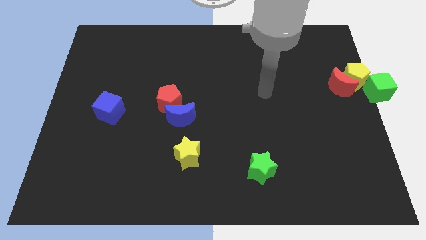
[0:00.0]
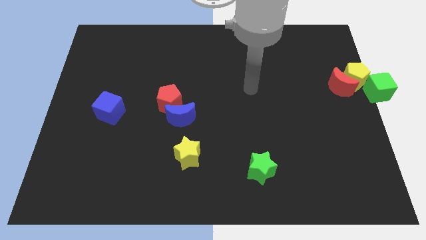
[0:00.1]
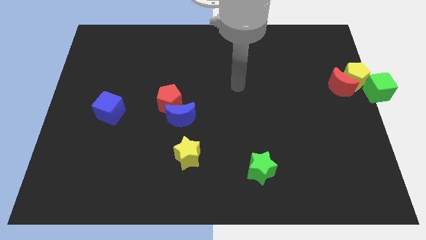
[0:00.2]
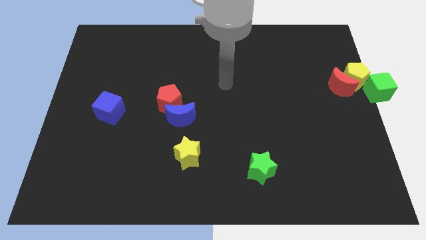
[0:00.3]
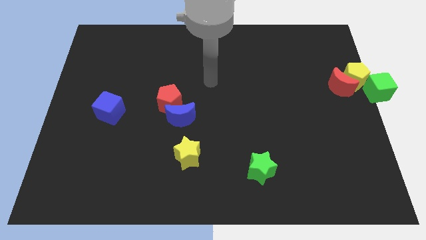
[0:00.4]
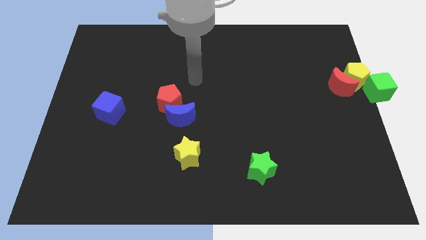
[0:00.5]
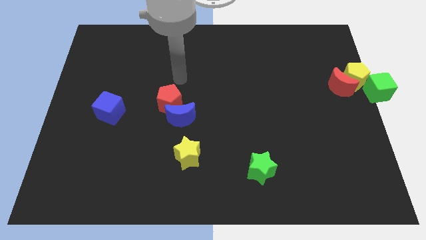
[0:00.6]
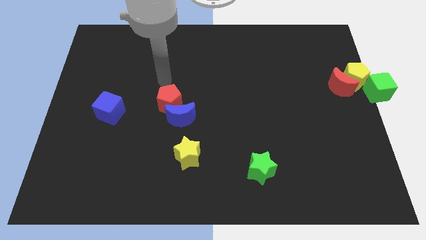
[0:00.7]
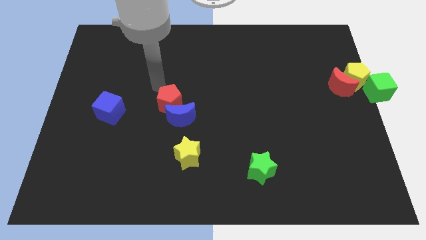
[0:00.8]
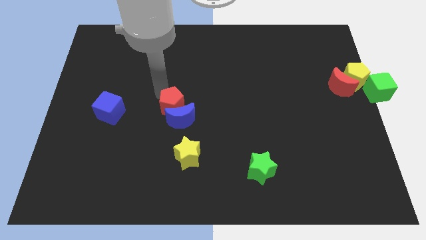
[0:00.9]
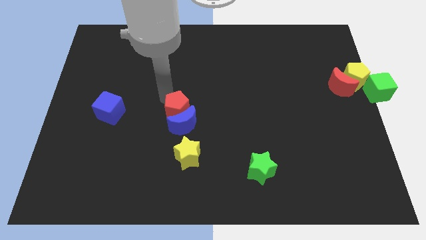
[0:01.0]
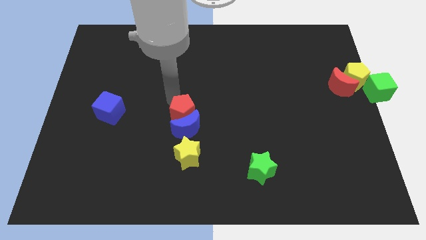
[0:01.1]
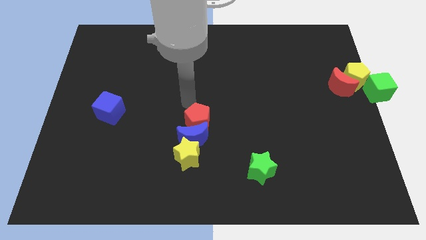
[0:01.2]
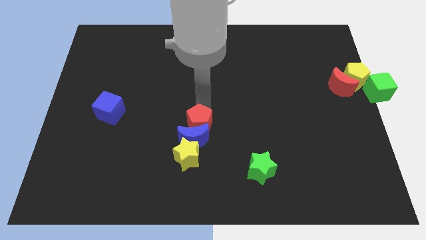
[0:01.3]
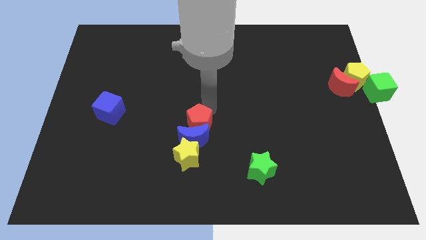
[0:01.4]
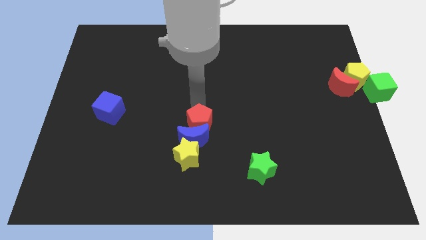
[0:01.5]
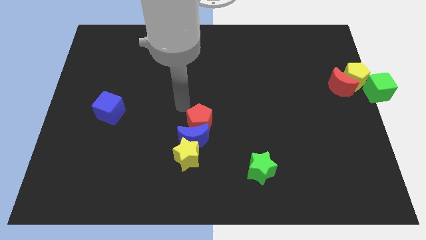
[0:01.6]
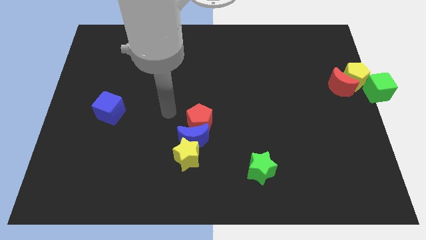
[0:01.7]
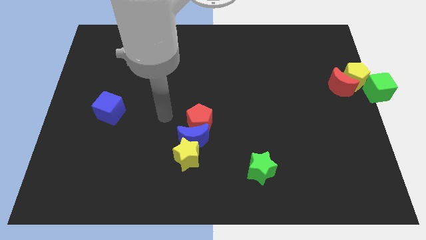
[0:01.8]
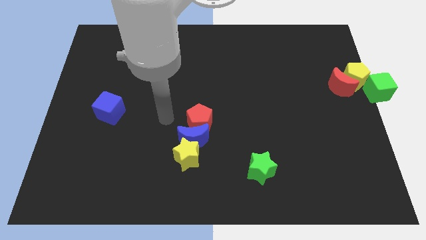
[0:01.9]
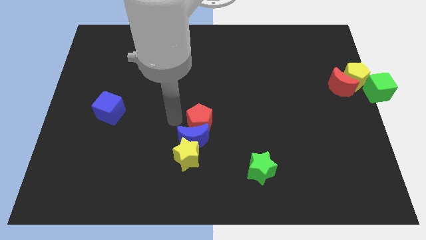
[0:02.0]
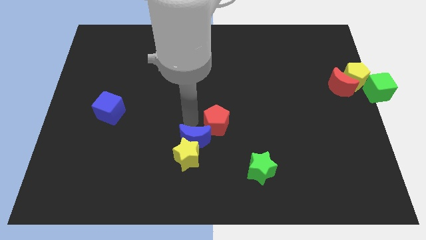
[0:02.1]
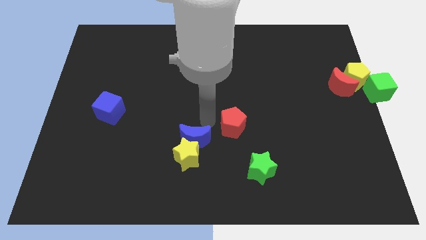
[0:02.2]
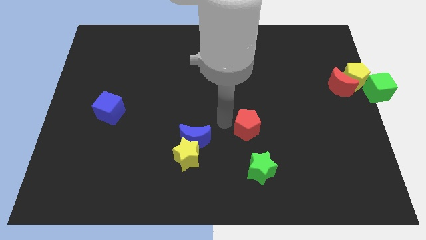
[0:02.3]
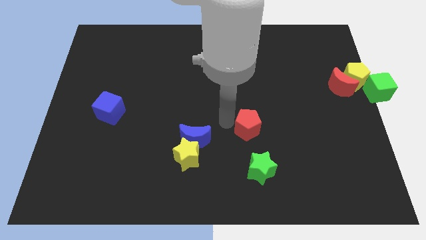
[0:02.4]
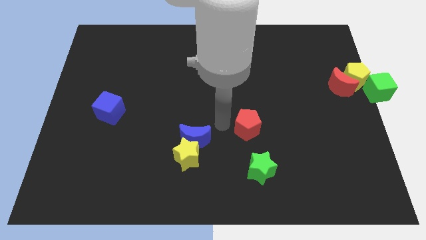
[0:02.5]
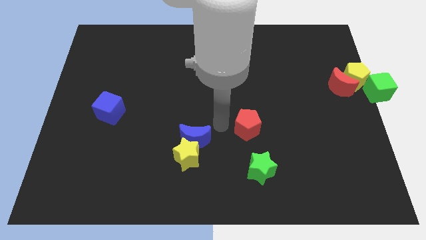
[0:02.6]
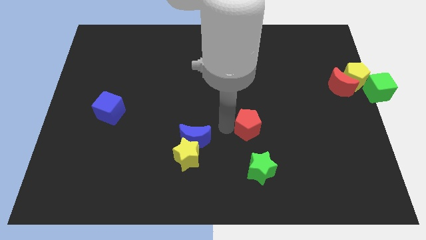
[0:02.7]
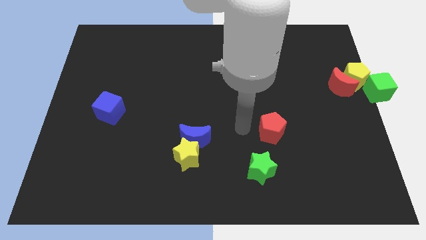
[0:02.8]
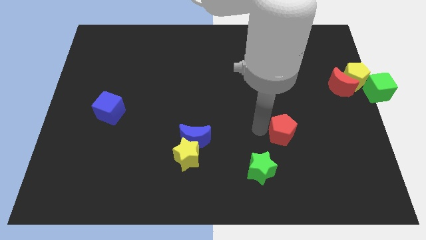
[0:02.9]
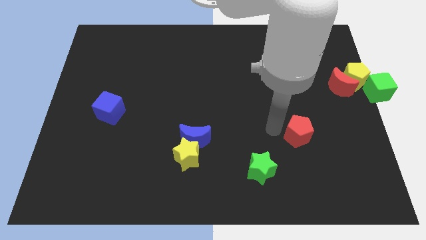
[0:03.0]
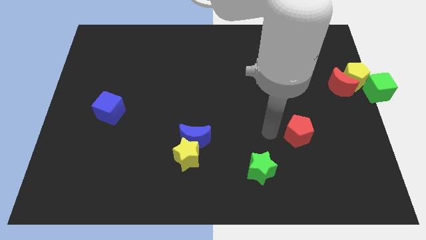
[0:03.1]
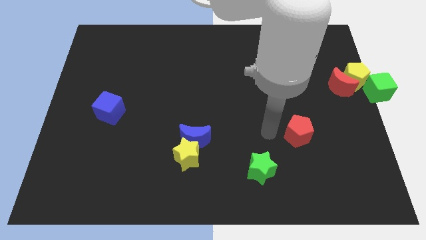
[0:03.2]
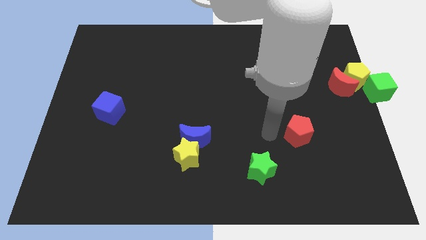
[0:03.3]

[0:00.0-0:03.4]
slide the red pentagon to the right side of the board

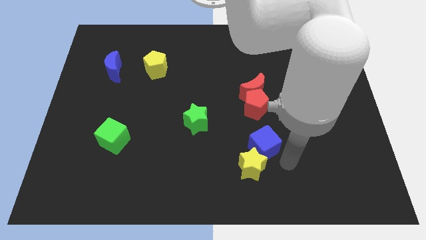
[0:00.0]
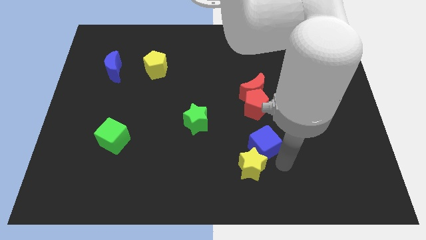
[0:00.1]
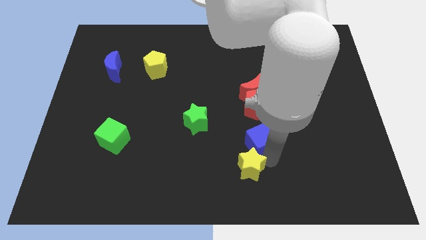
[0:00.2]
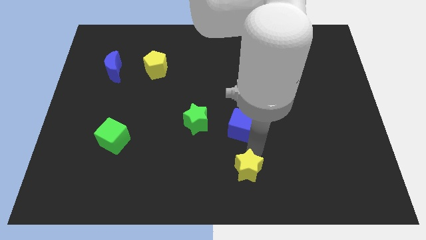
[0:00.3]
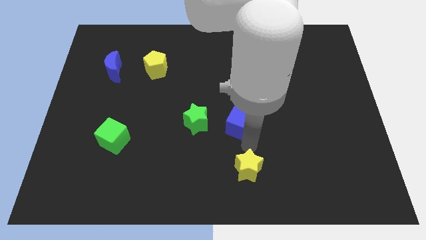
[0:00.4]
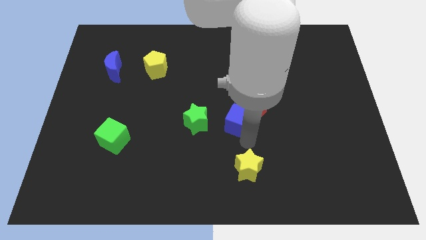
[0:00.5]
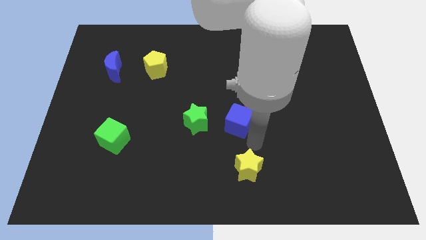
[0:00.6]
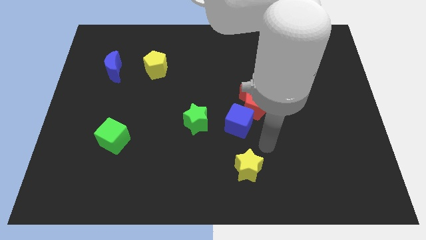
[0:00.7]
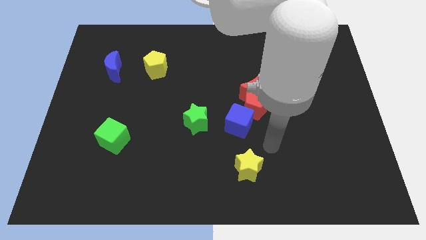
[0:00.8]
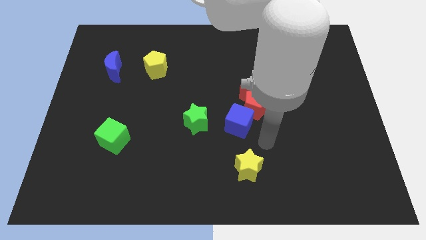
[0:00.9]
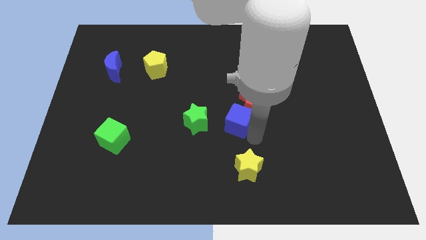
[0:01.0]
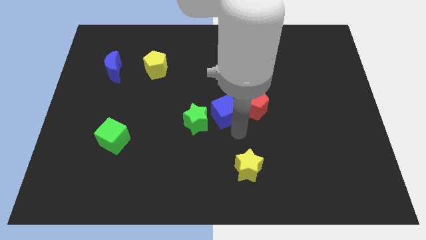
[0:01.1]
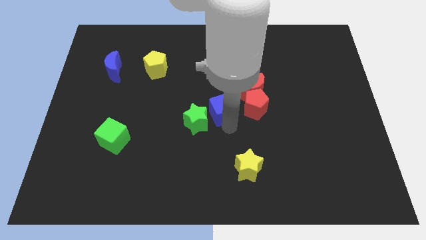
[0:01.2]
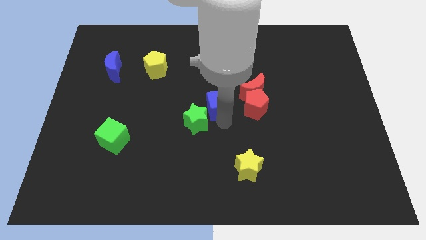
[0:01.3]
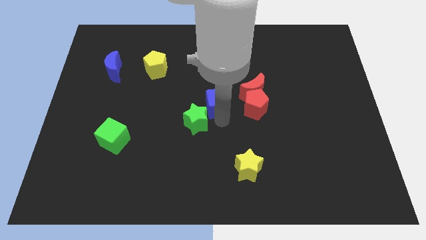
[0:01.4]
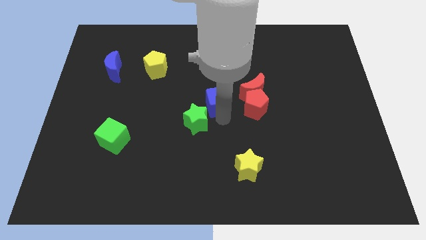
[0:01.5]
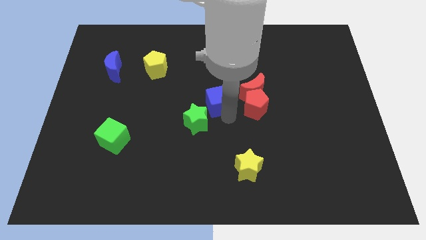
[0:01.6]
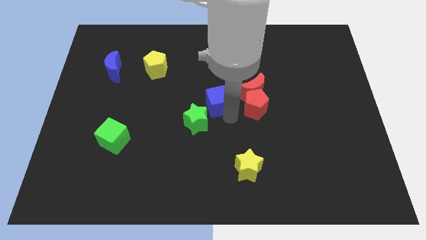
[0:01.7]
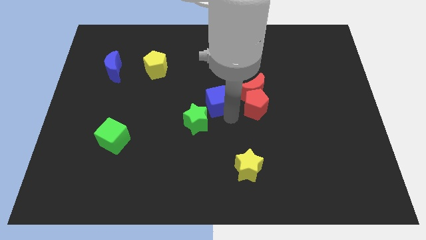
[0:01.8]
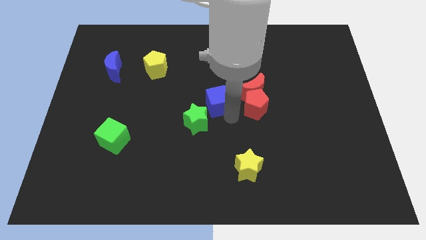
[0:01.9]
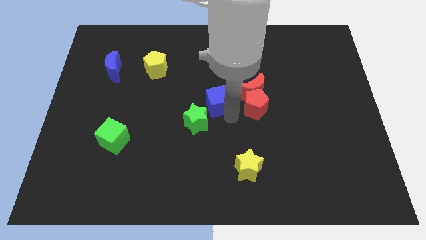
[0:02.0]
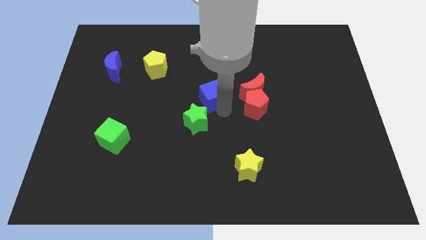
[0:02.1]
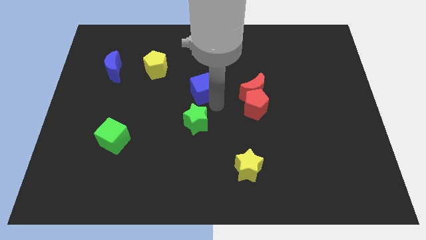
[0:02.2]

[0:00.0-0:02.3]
push the blue cube to the top right to the green star

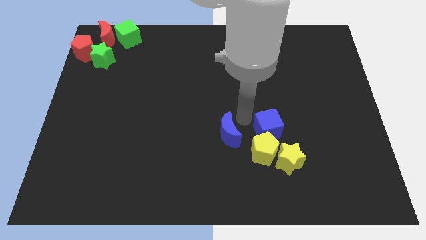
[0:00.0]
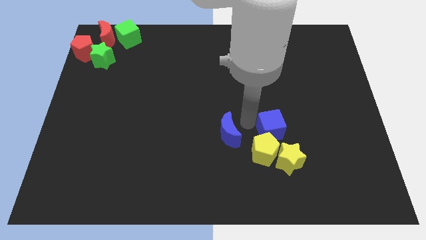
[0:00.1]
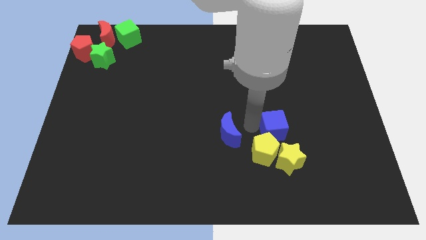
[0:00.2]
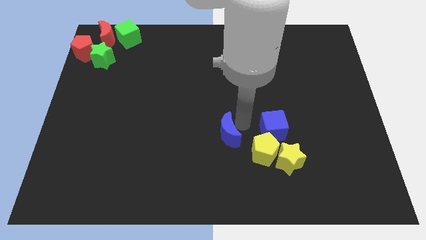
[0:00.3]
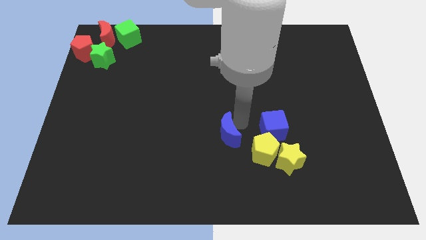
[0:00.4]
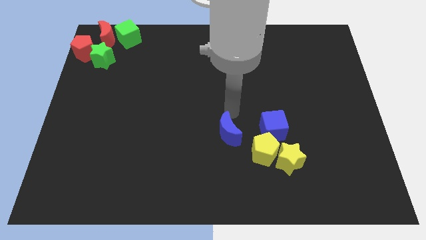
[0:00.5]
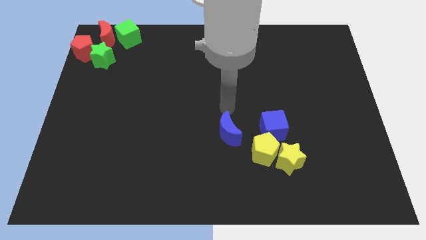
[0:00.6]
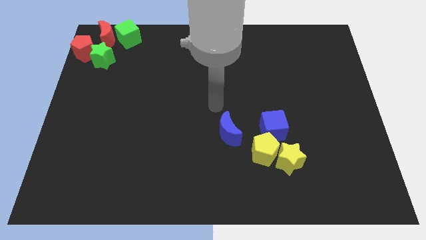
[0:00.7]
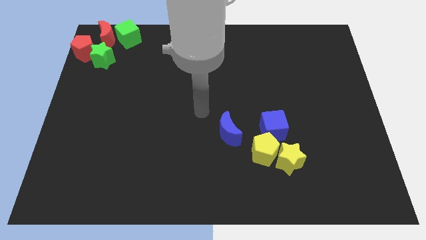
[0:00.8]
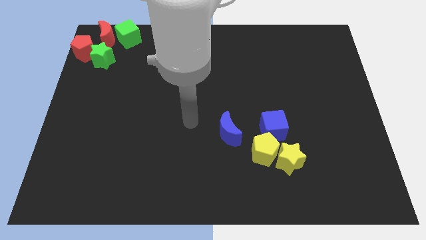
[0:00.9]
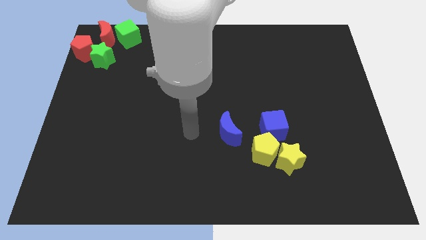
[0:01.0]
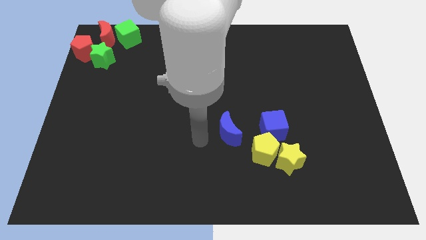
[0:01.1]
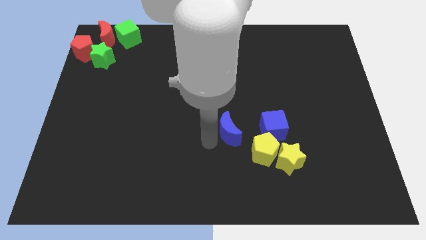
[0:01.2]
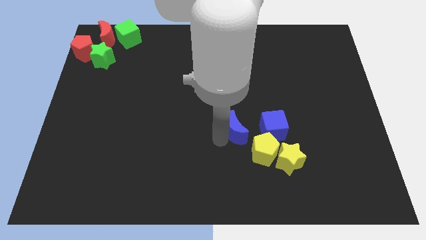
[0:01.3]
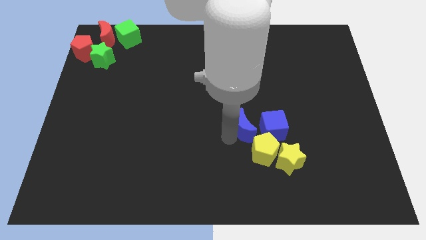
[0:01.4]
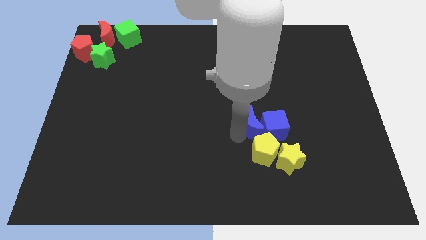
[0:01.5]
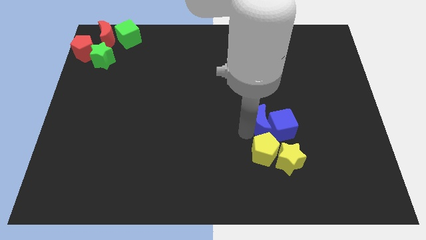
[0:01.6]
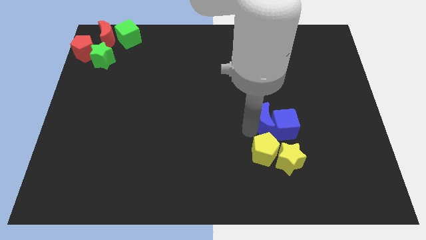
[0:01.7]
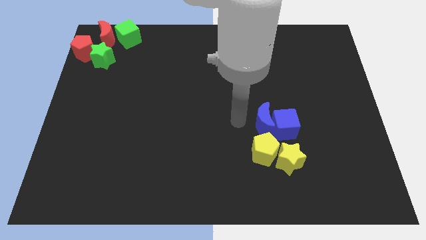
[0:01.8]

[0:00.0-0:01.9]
push the blue crescent into the blue cube

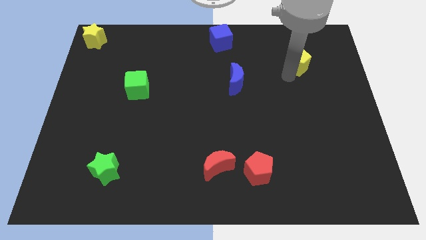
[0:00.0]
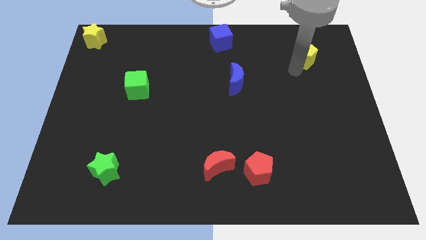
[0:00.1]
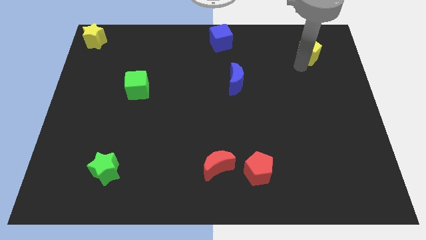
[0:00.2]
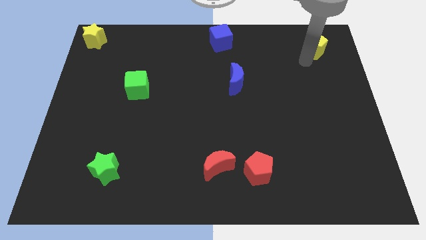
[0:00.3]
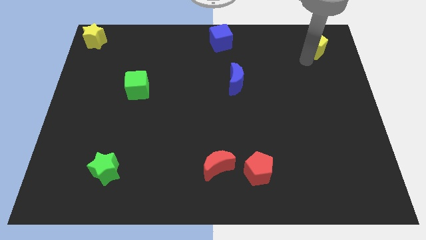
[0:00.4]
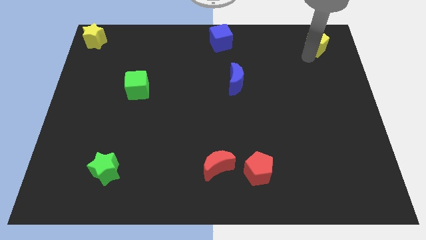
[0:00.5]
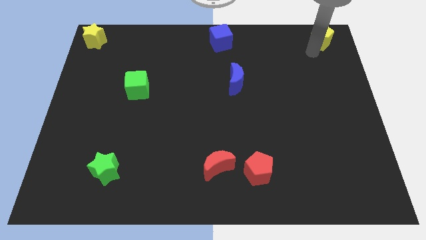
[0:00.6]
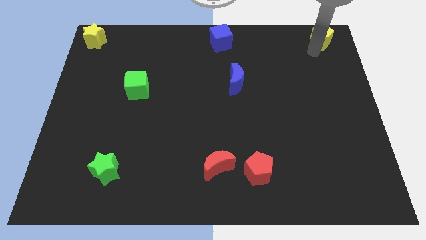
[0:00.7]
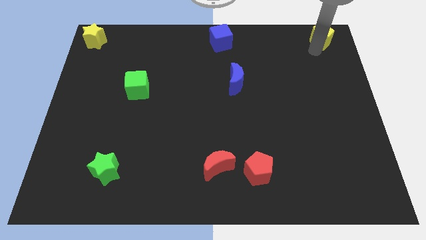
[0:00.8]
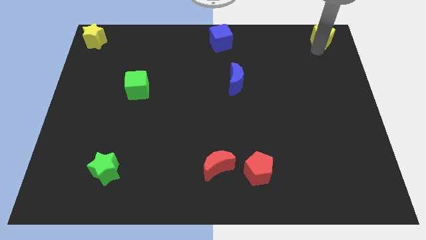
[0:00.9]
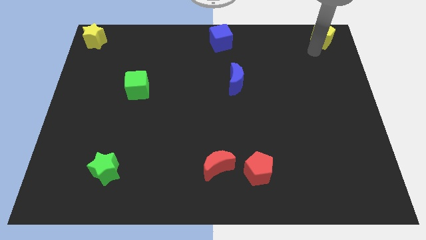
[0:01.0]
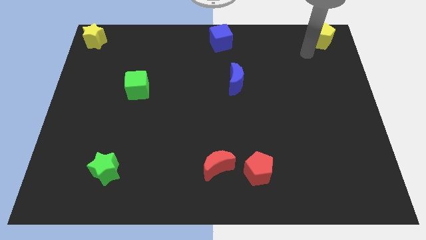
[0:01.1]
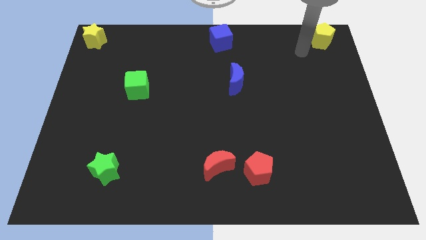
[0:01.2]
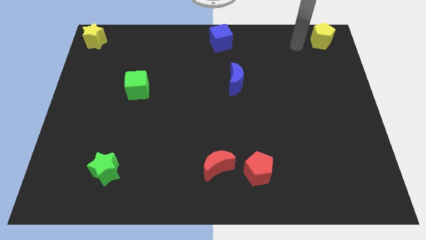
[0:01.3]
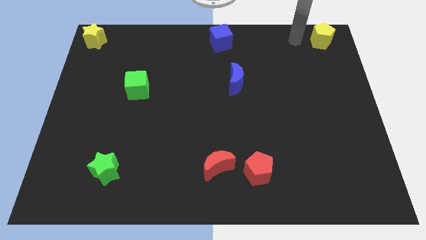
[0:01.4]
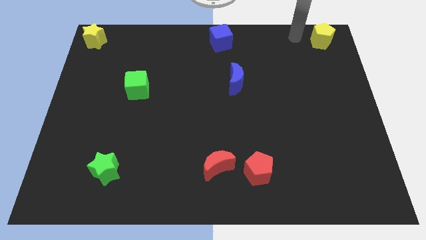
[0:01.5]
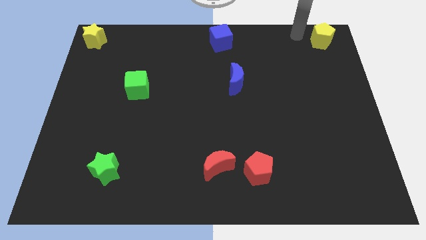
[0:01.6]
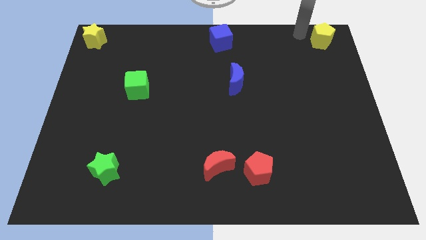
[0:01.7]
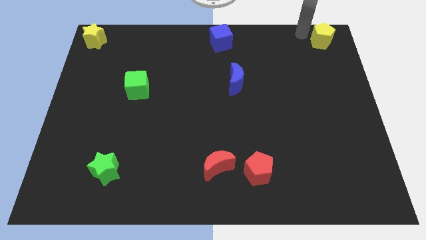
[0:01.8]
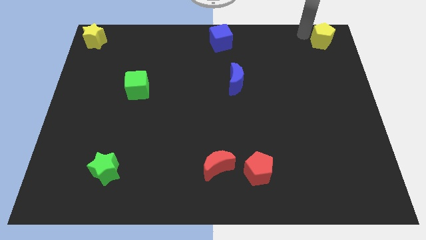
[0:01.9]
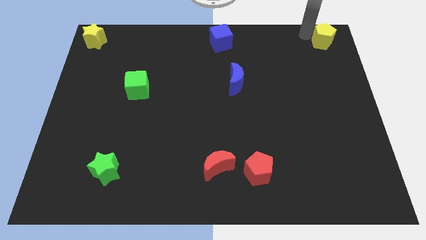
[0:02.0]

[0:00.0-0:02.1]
place the yellow pentagon to the top right side of the board
